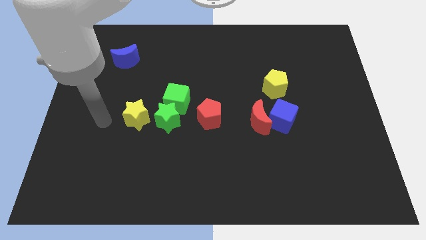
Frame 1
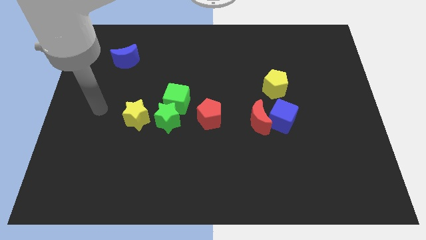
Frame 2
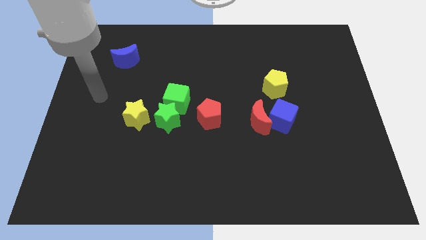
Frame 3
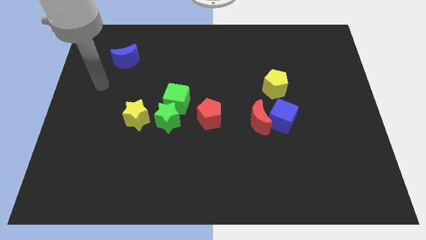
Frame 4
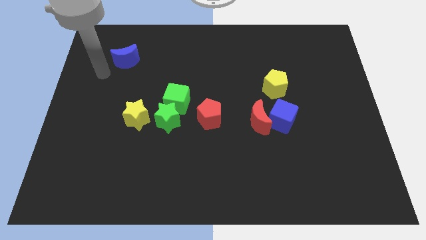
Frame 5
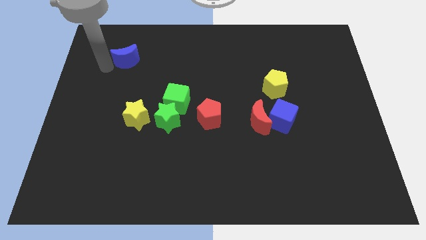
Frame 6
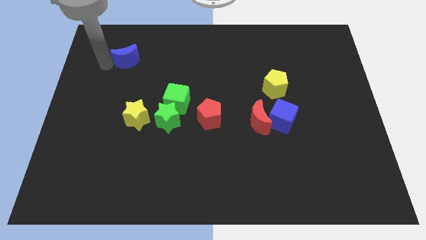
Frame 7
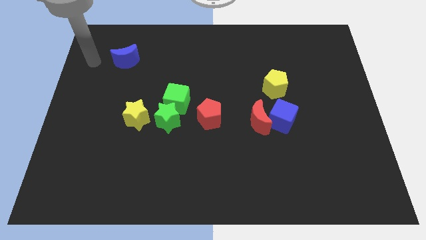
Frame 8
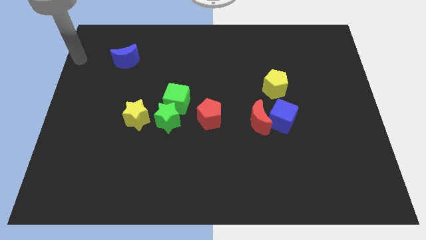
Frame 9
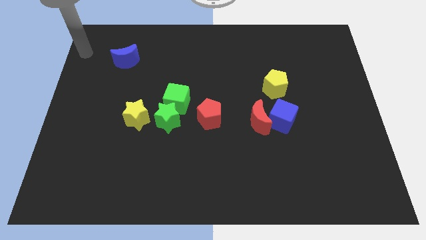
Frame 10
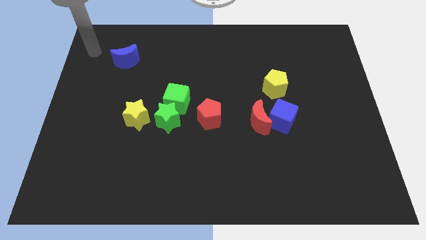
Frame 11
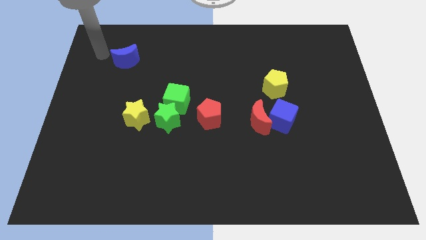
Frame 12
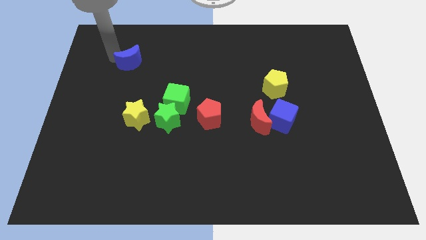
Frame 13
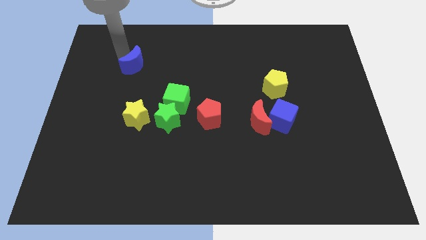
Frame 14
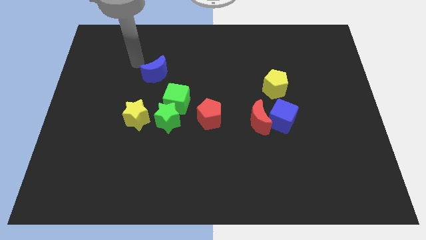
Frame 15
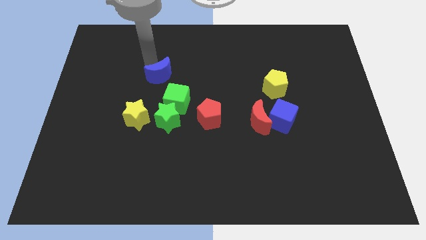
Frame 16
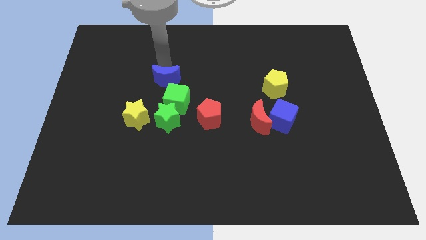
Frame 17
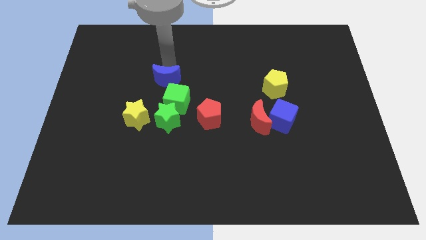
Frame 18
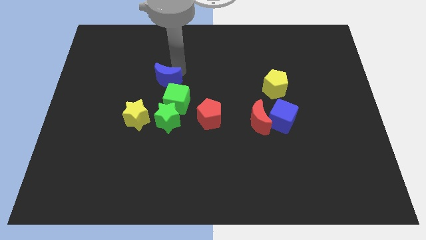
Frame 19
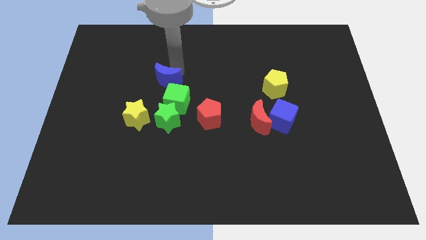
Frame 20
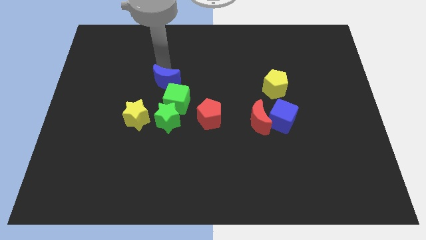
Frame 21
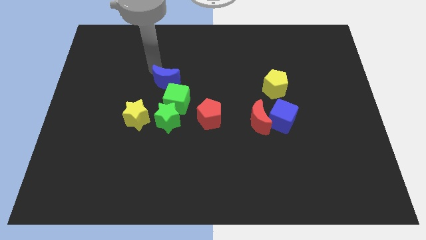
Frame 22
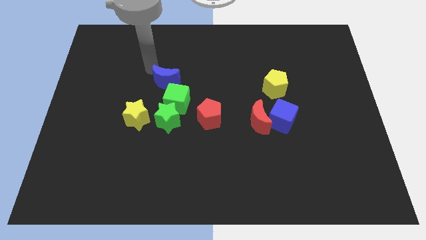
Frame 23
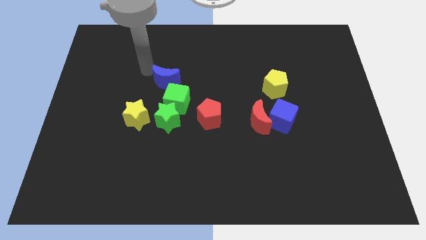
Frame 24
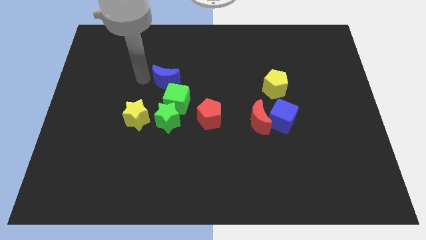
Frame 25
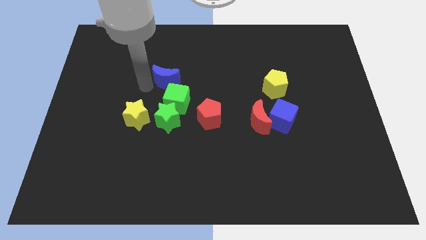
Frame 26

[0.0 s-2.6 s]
place the blue moon diagonally top left of the green cube

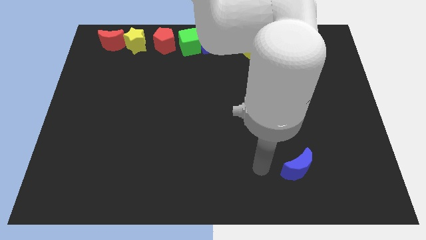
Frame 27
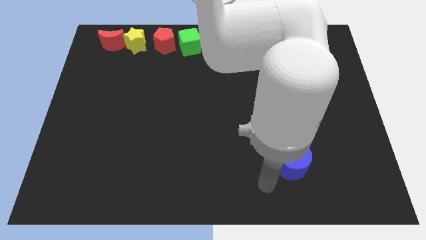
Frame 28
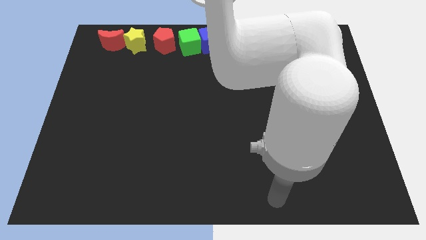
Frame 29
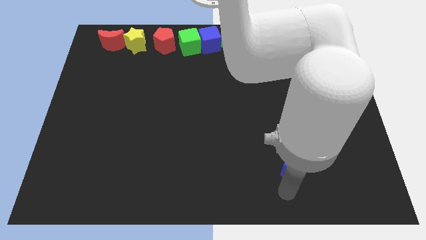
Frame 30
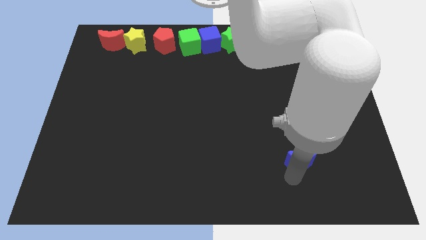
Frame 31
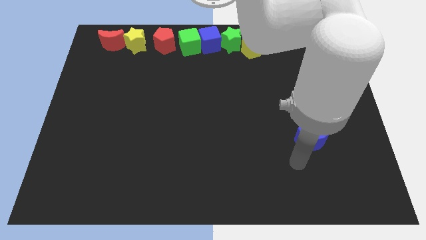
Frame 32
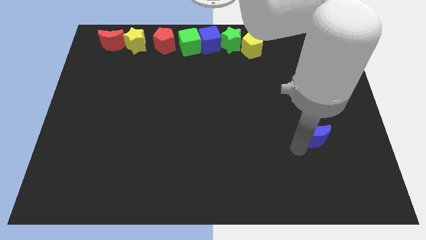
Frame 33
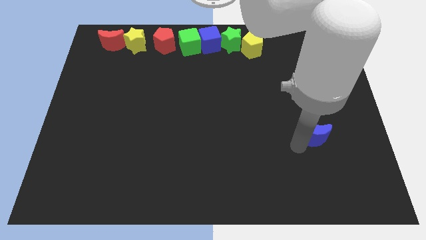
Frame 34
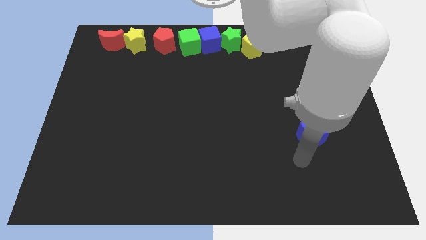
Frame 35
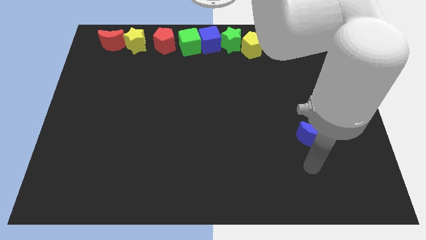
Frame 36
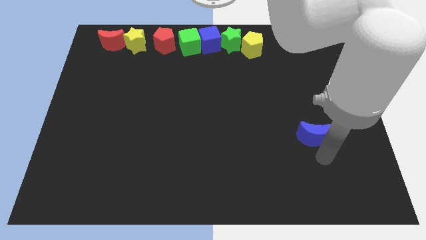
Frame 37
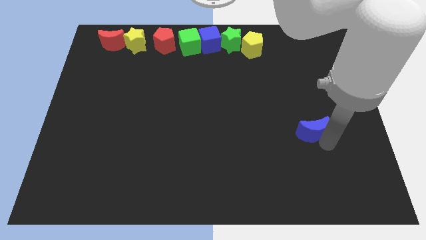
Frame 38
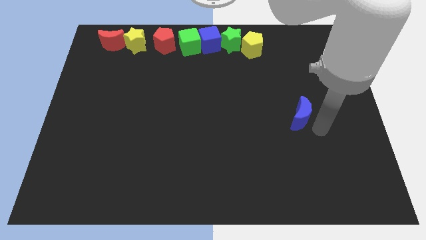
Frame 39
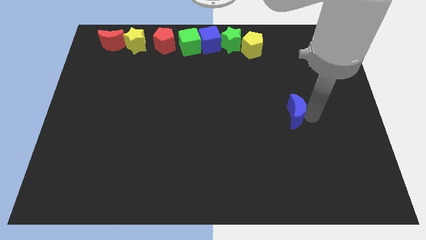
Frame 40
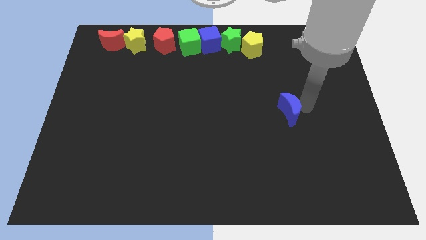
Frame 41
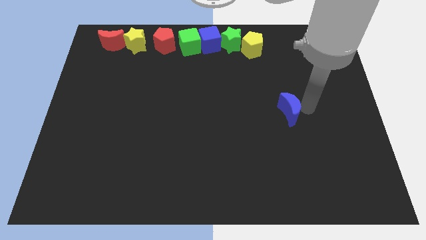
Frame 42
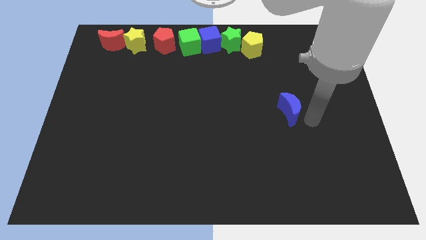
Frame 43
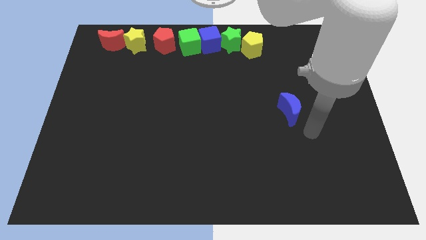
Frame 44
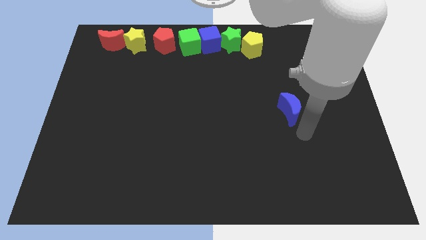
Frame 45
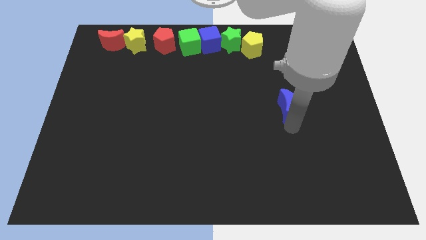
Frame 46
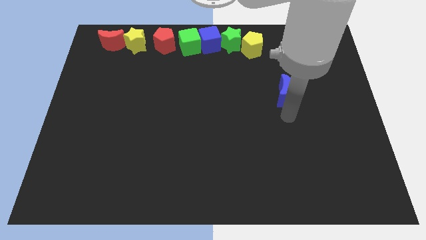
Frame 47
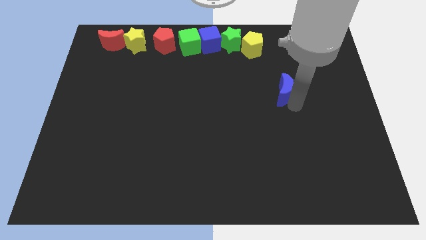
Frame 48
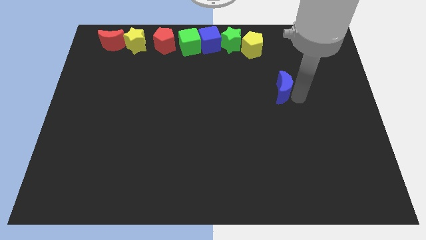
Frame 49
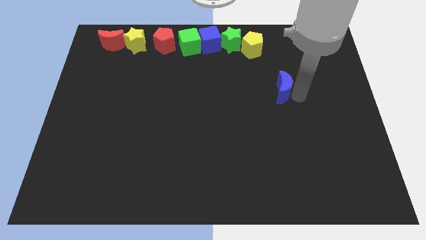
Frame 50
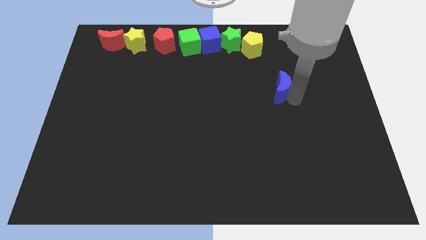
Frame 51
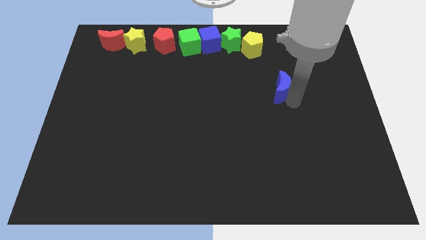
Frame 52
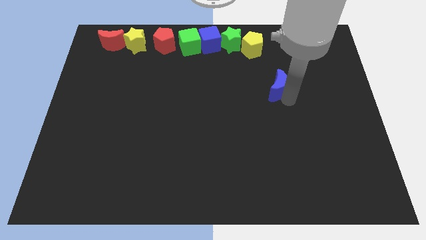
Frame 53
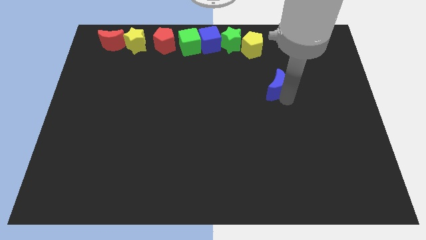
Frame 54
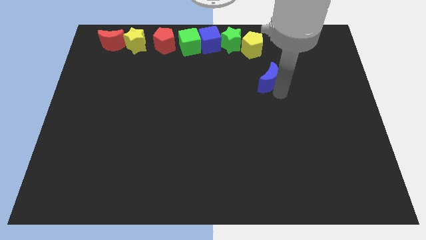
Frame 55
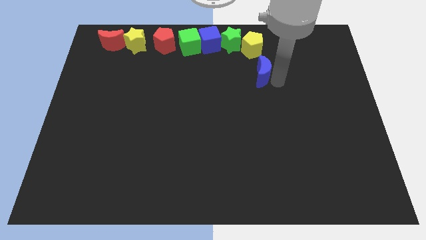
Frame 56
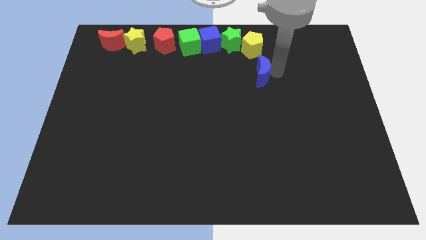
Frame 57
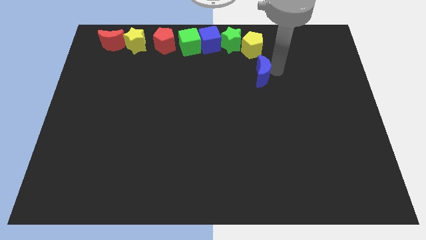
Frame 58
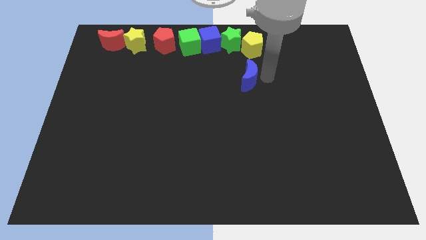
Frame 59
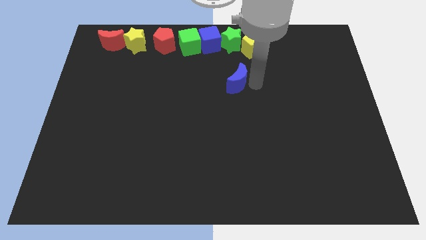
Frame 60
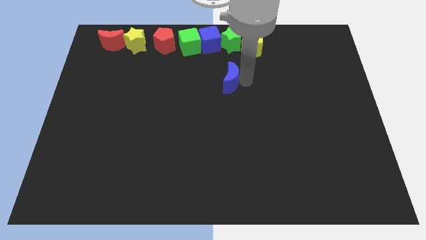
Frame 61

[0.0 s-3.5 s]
push blue moon to the bottom of green star

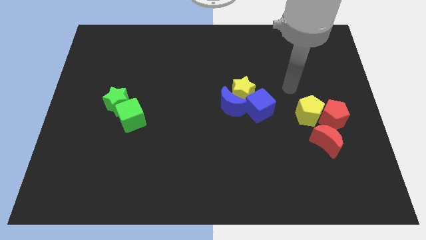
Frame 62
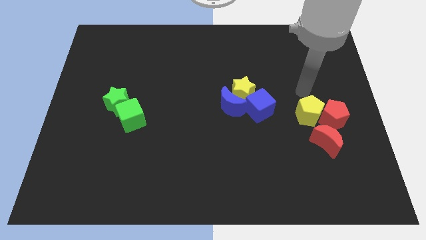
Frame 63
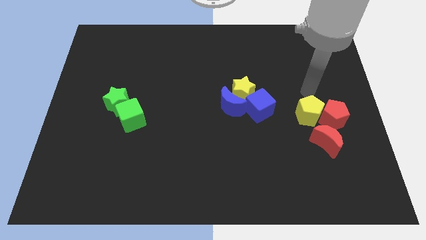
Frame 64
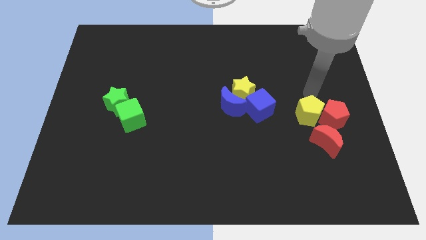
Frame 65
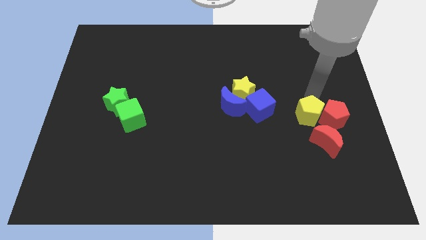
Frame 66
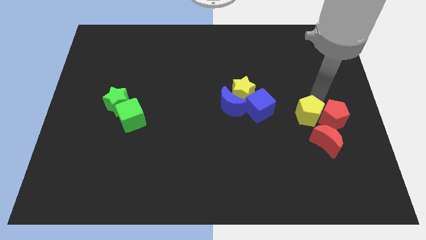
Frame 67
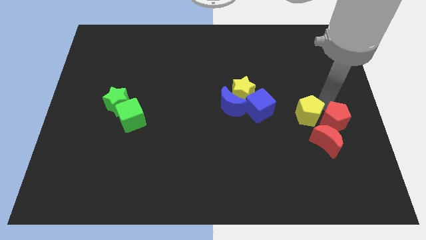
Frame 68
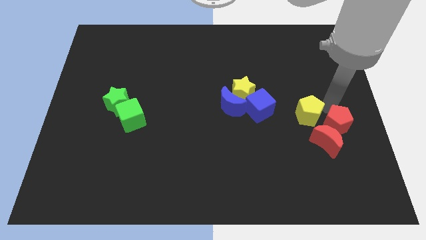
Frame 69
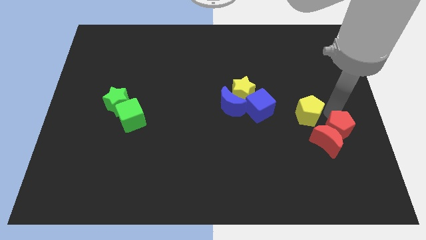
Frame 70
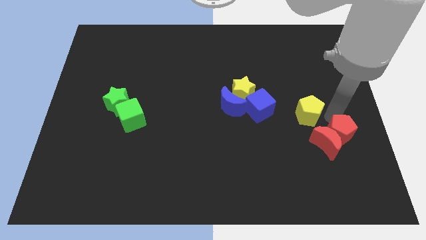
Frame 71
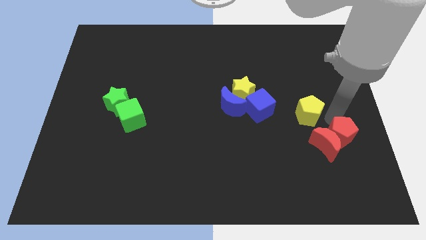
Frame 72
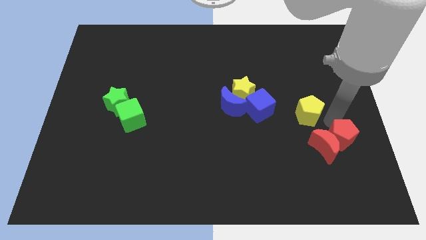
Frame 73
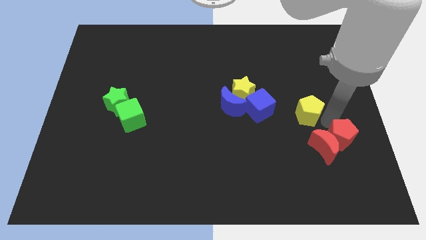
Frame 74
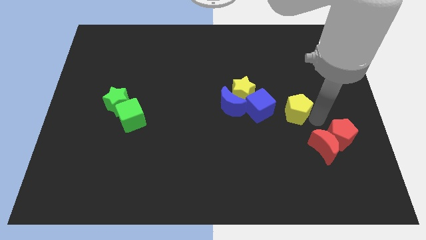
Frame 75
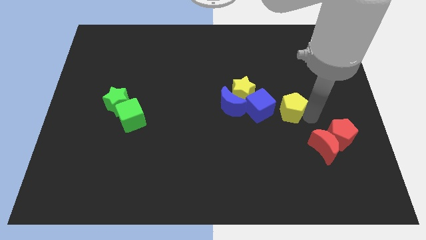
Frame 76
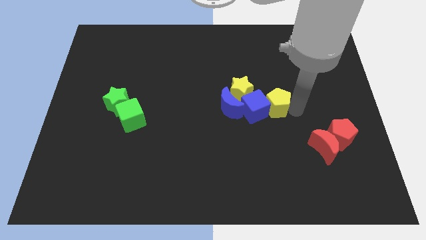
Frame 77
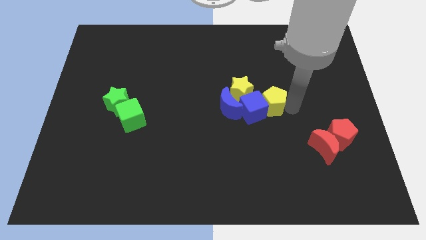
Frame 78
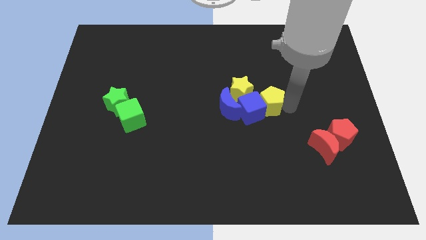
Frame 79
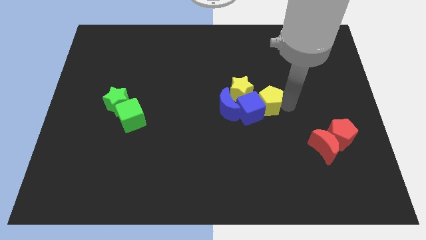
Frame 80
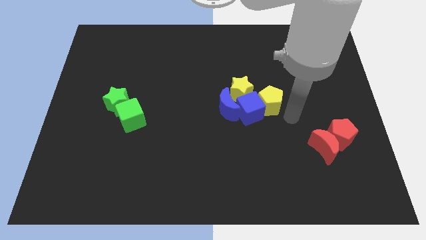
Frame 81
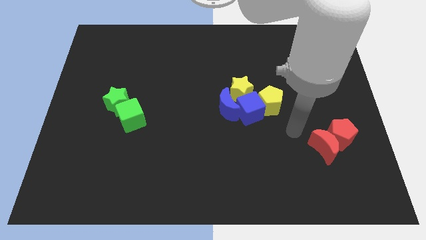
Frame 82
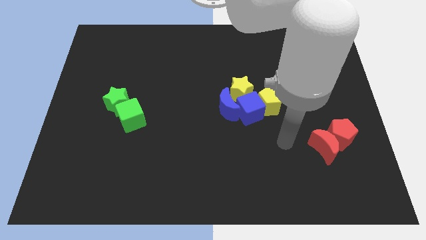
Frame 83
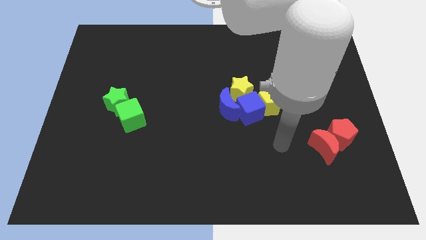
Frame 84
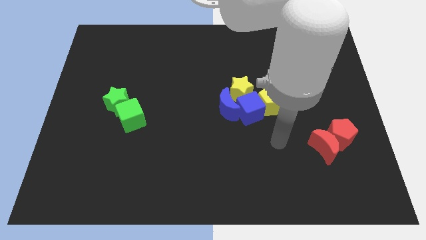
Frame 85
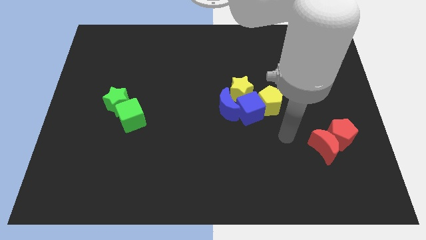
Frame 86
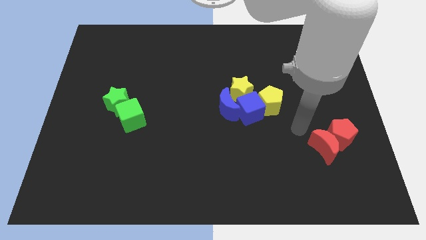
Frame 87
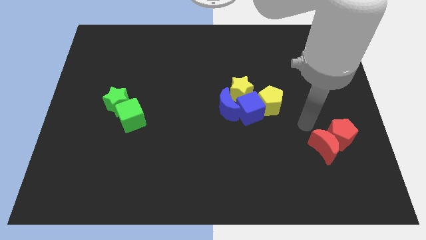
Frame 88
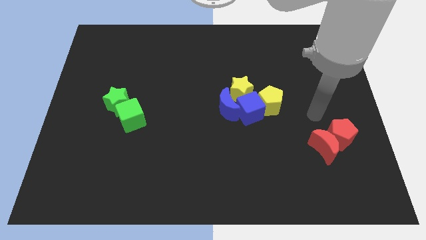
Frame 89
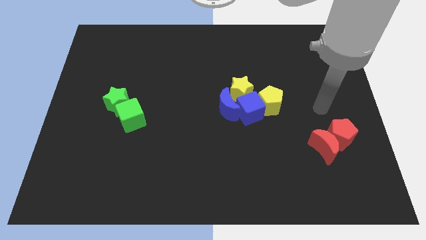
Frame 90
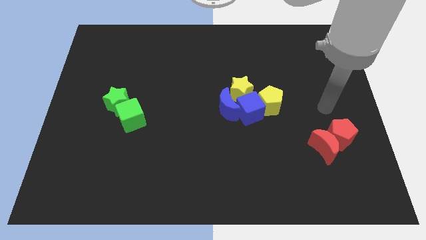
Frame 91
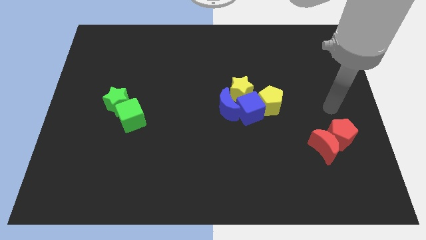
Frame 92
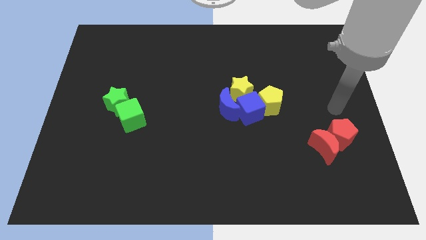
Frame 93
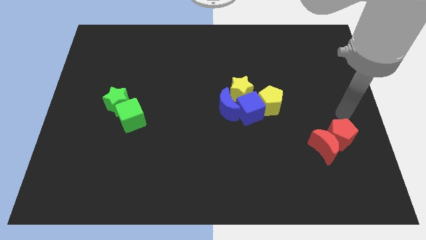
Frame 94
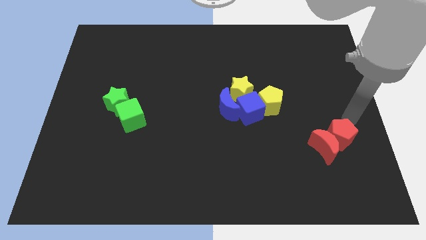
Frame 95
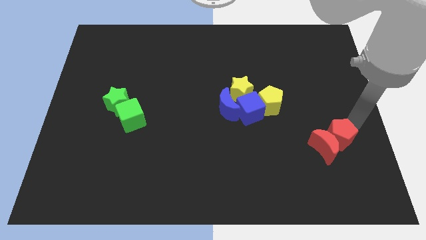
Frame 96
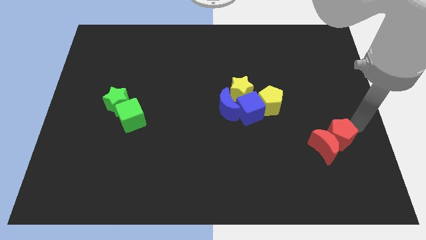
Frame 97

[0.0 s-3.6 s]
move the yellow pentagon to the right side of the blue cube
